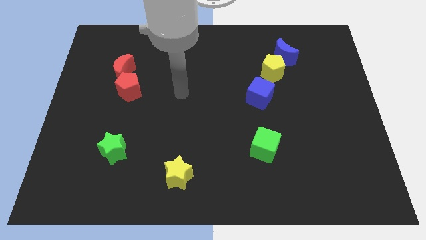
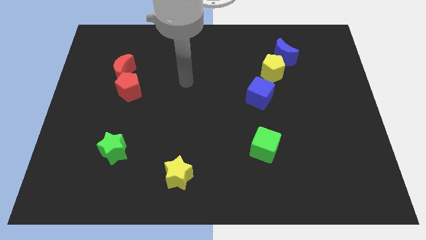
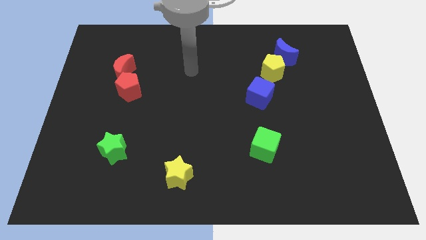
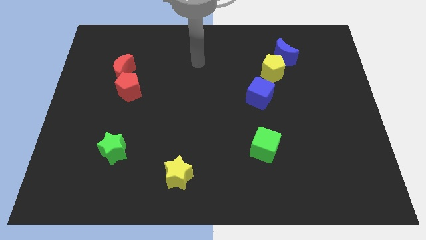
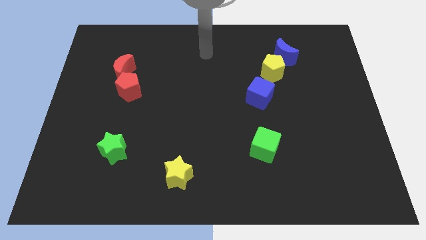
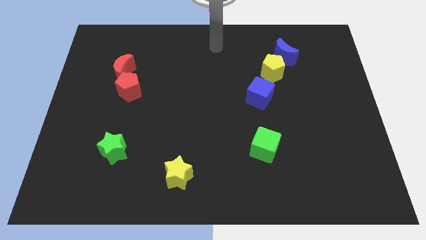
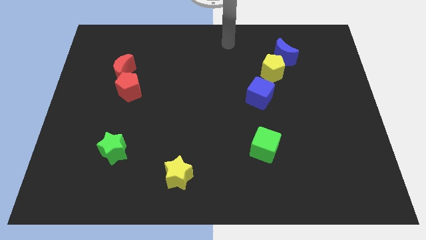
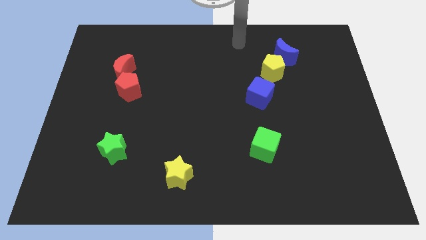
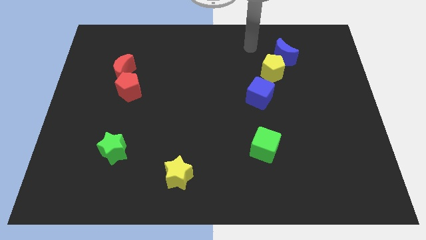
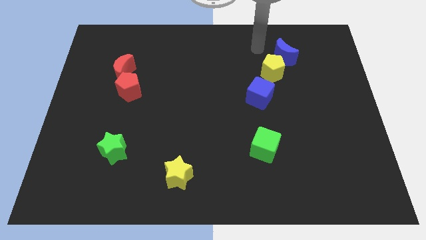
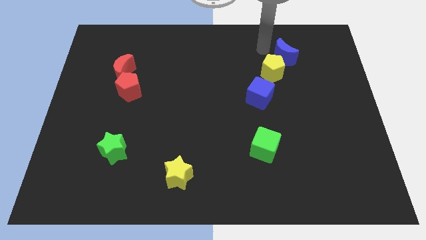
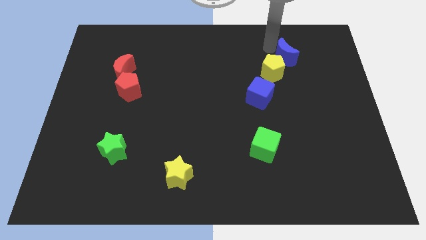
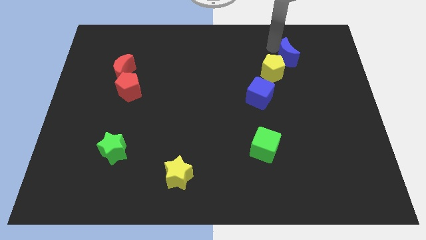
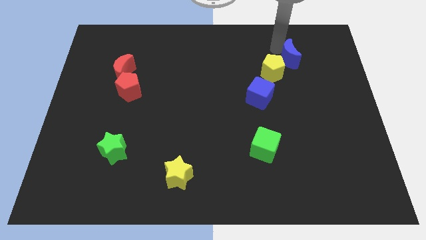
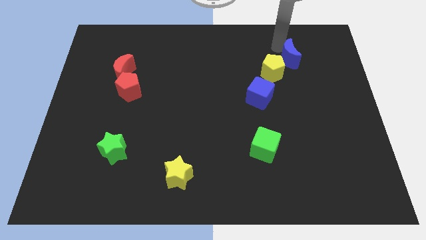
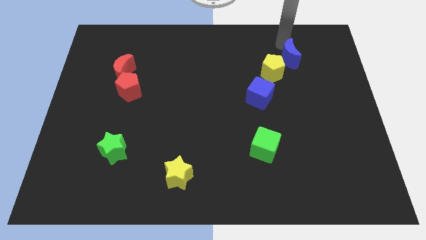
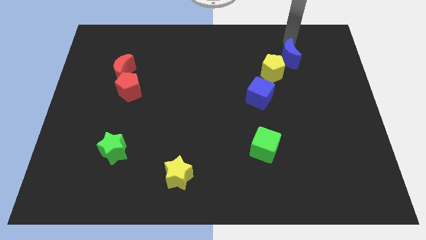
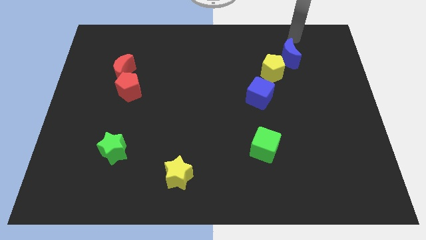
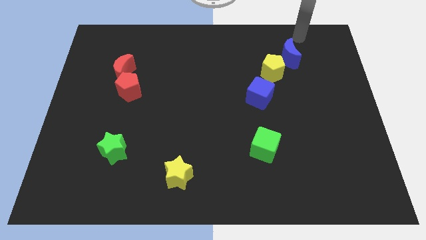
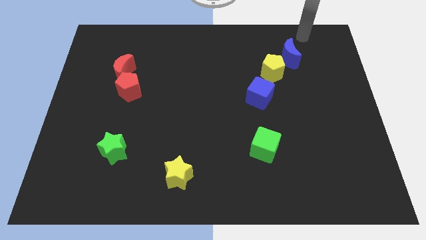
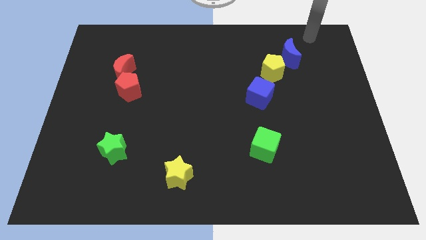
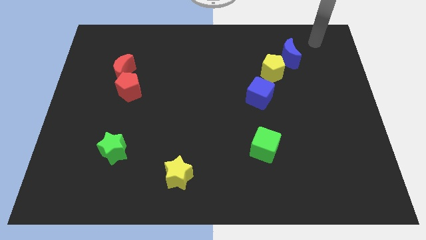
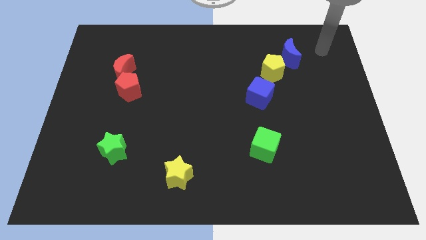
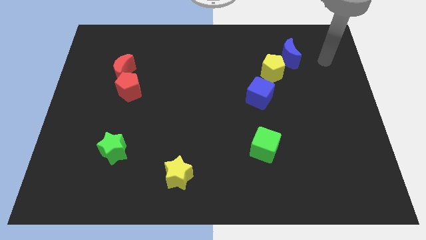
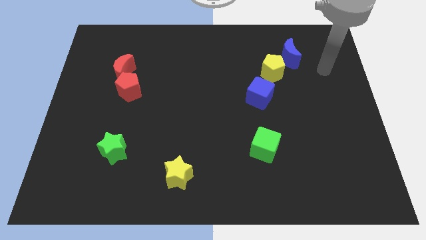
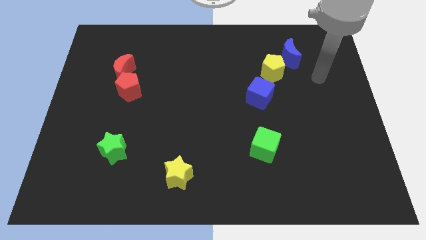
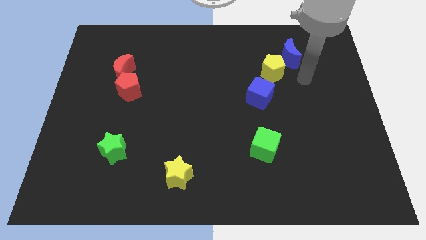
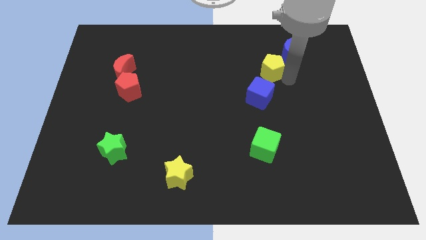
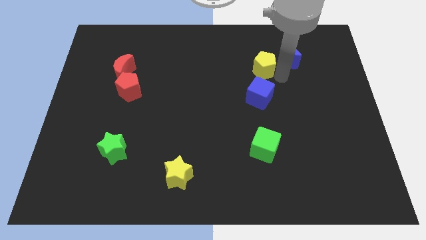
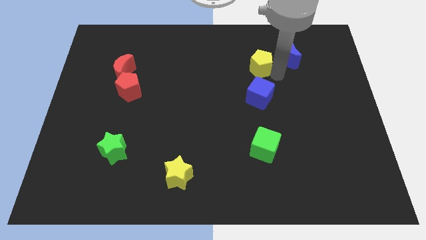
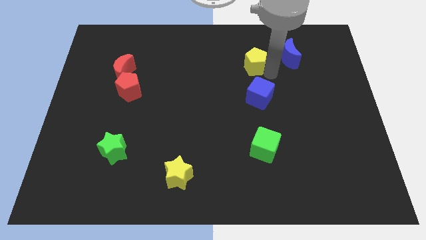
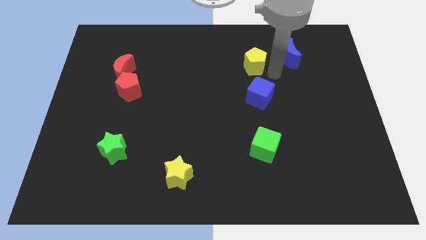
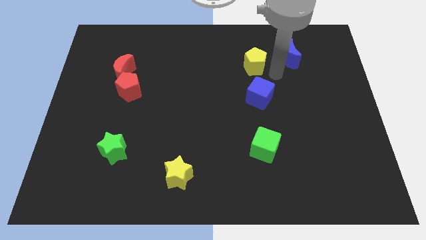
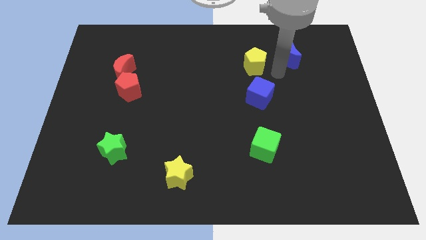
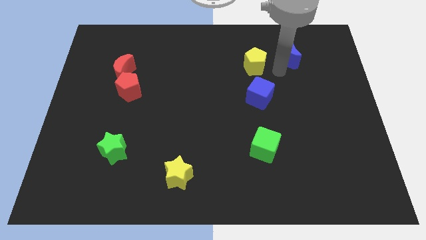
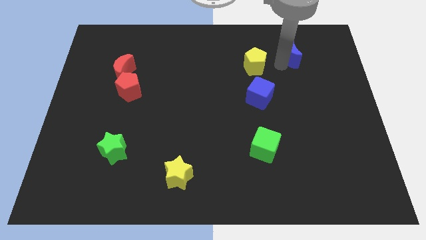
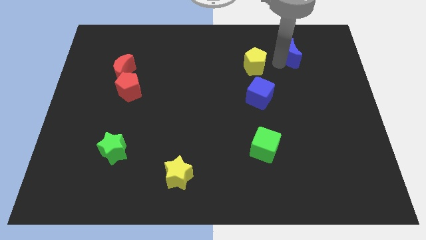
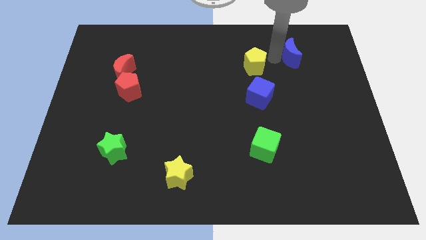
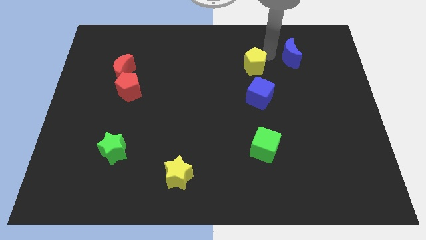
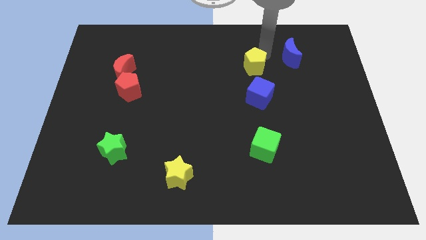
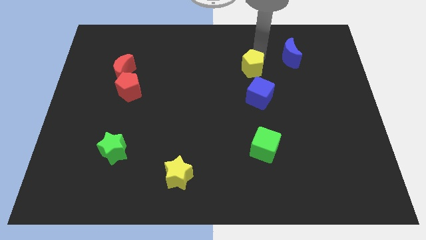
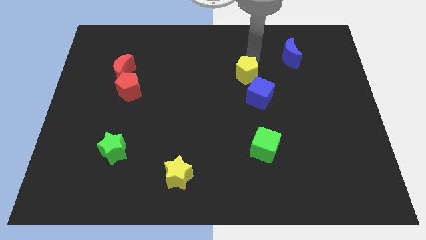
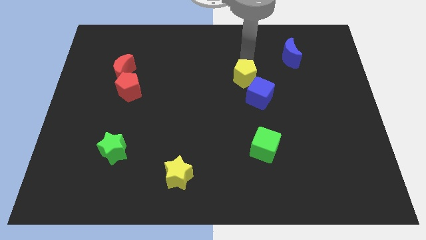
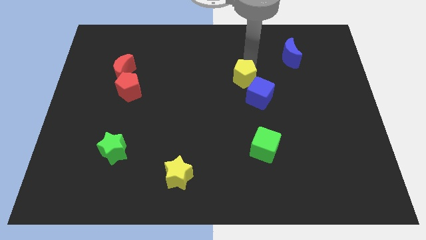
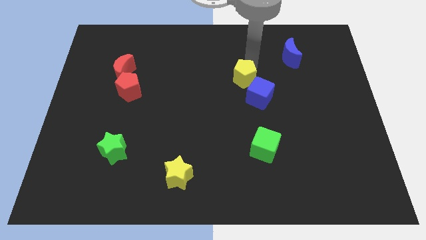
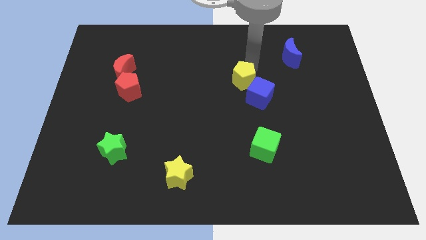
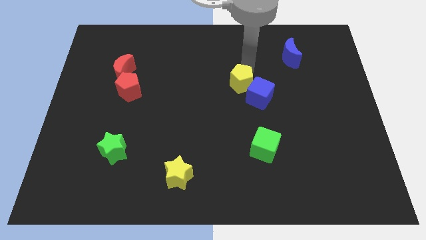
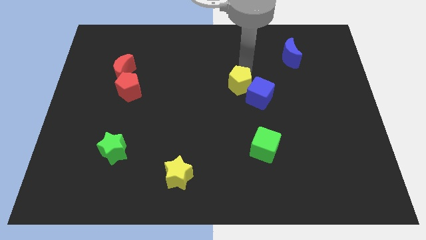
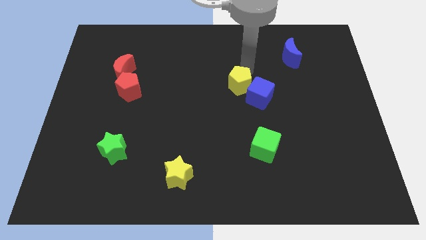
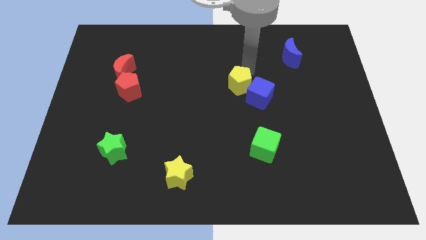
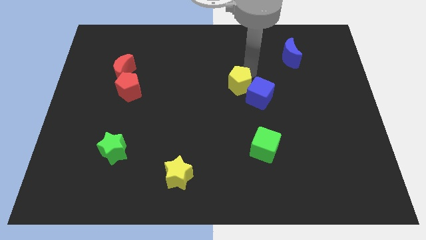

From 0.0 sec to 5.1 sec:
apart blue crescent and yellow pentagon

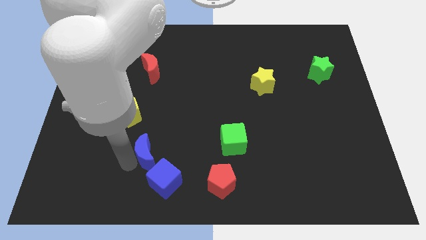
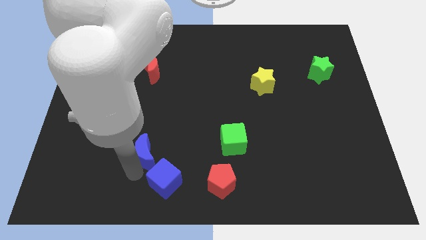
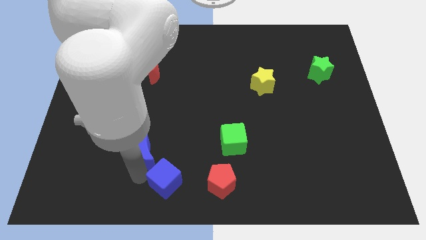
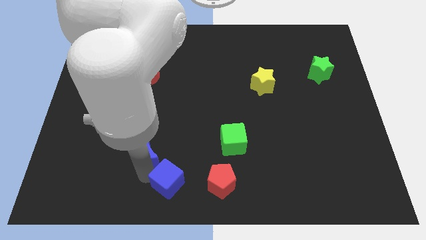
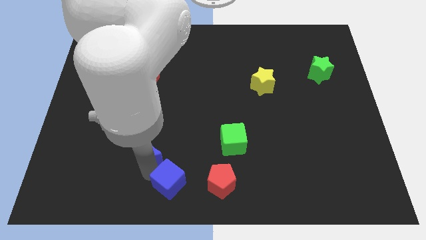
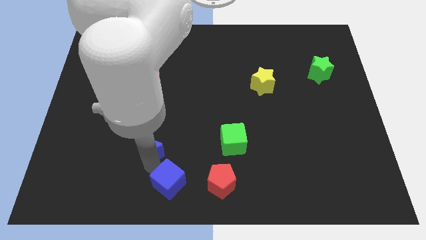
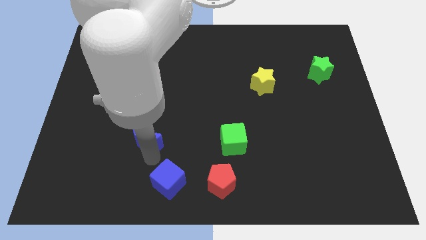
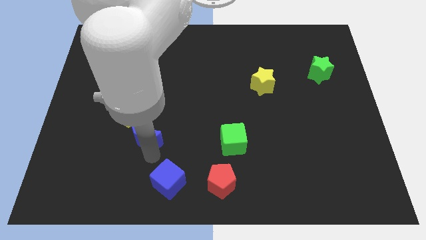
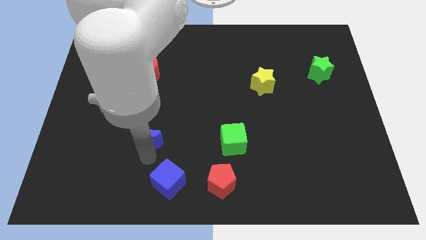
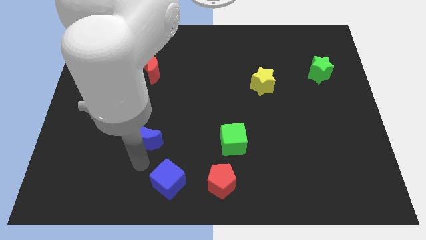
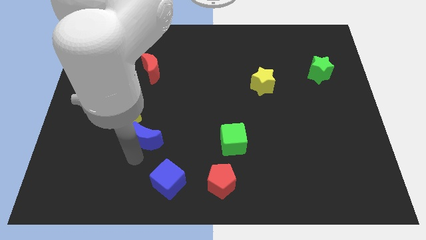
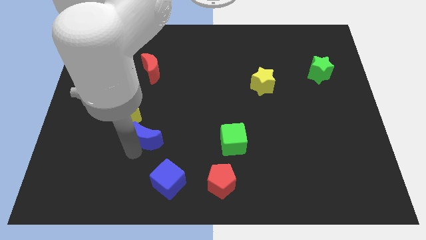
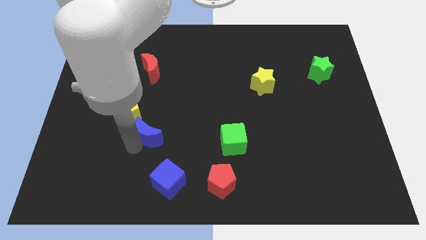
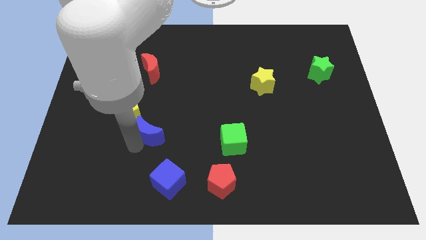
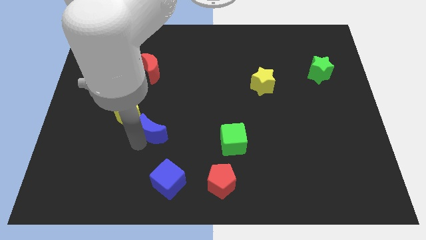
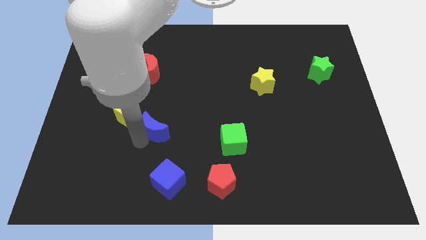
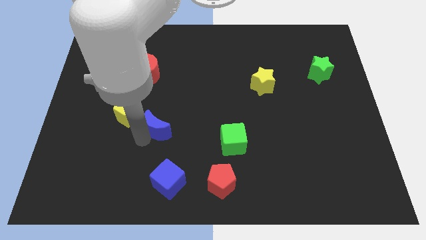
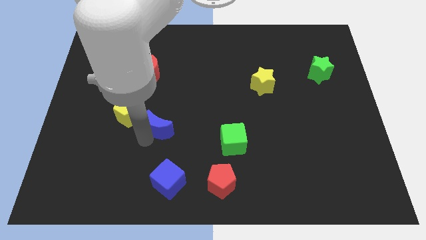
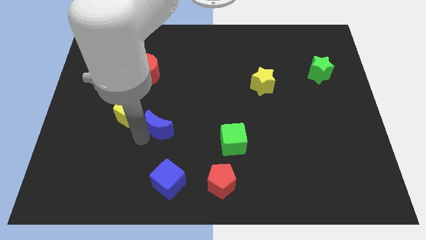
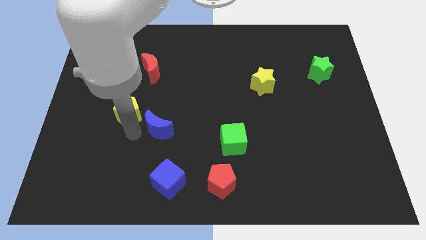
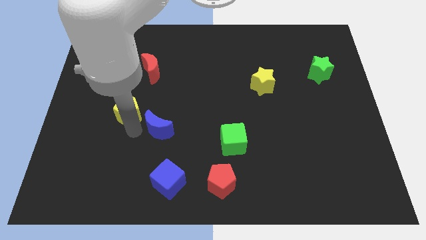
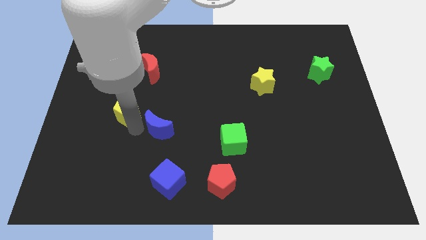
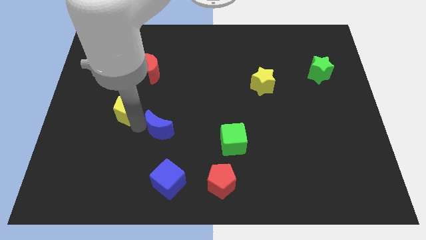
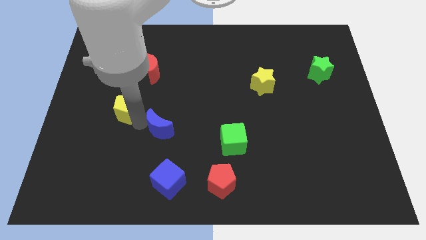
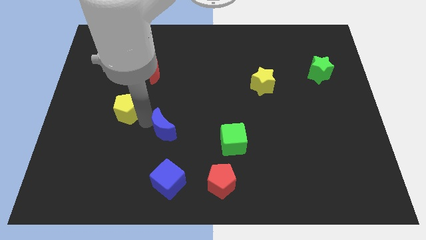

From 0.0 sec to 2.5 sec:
place the blue moon in between the green cube and yellow pentagon

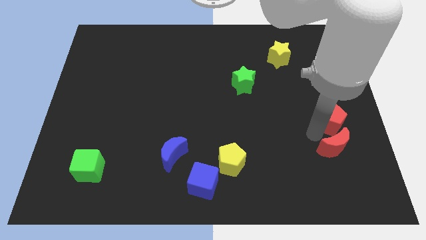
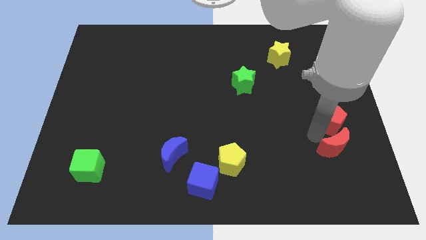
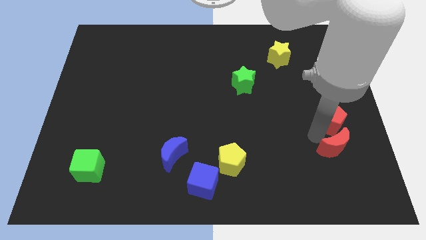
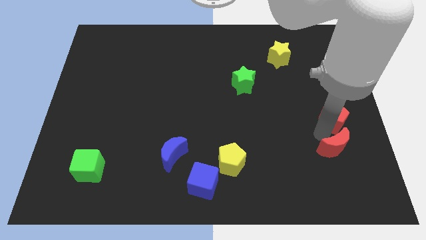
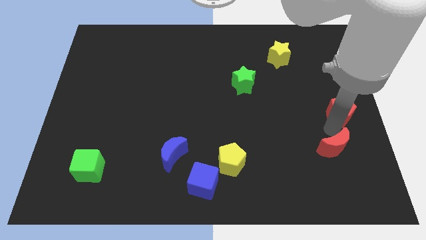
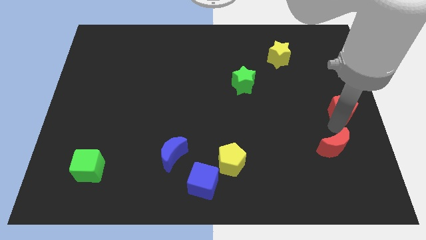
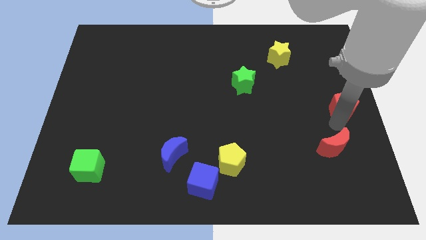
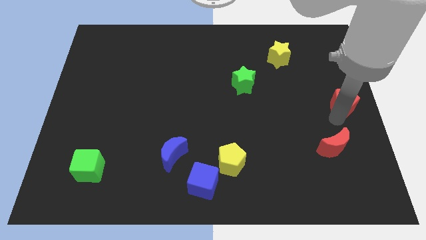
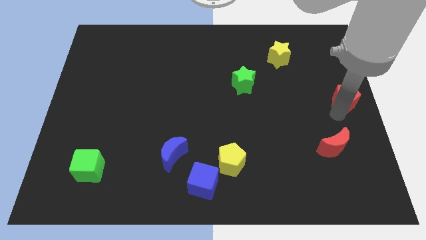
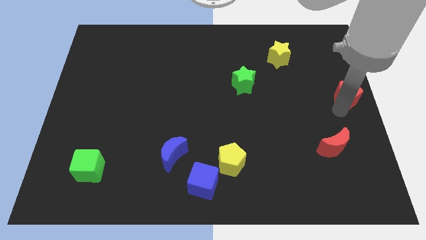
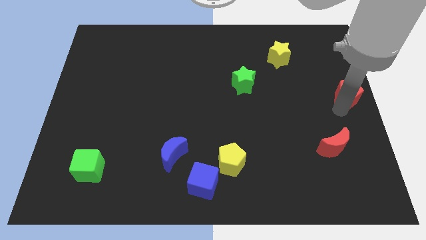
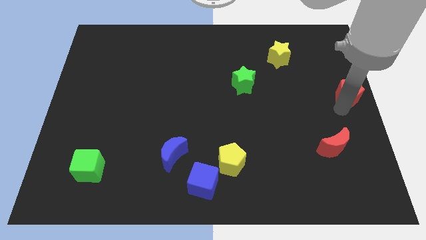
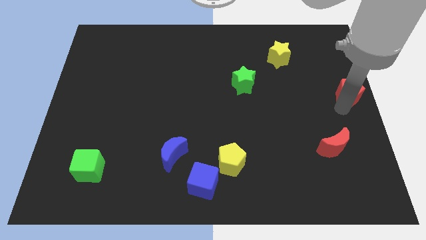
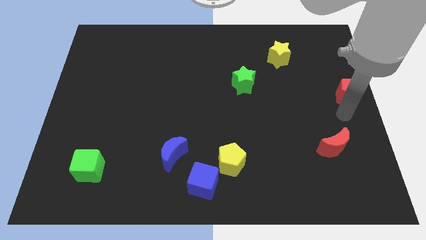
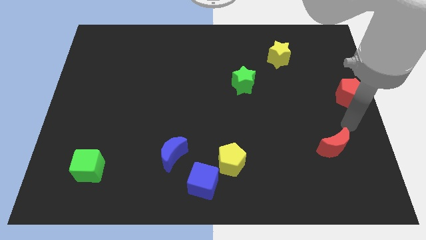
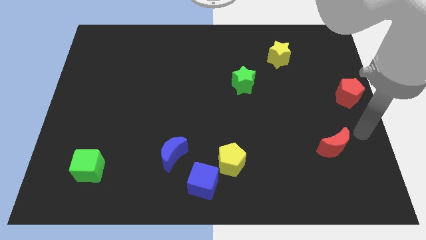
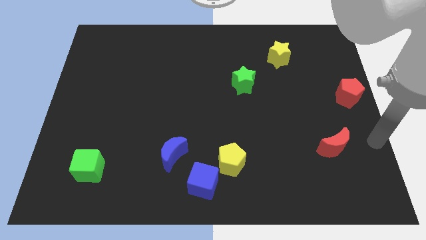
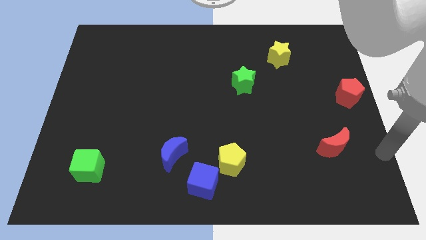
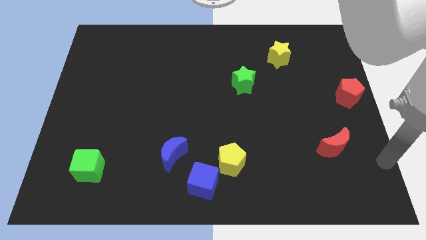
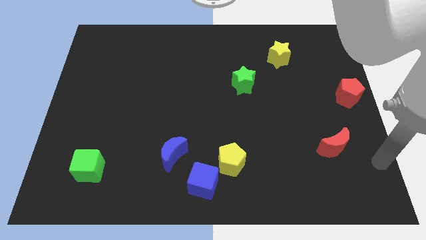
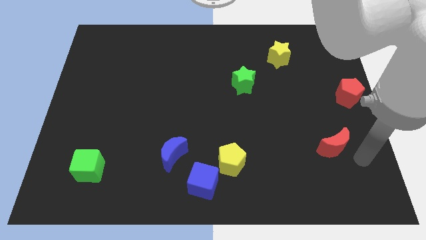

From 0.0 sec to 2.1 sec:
separate the red pentagon from the red moon
